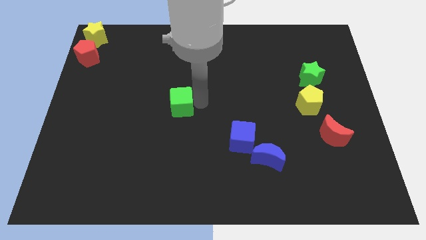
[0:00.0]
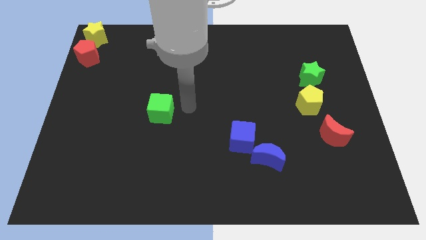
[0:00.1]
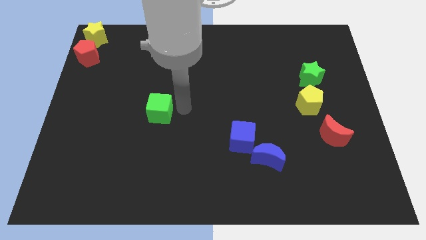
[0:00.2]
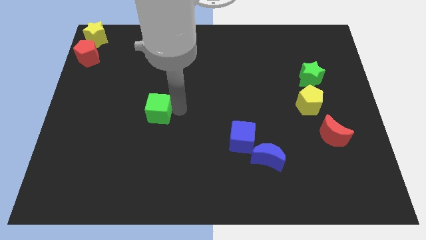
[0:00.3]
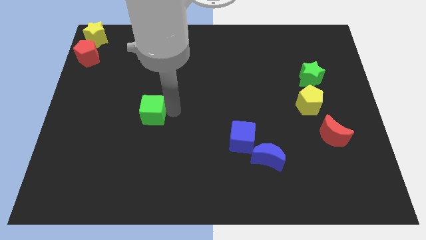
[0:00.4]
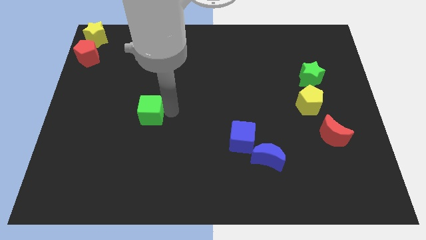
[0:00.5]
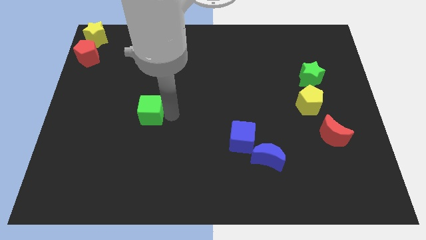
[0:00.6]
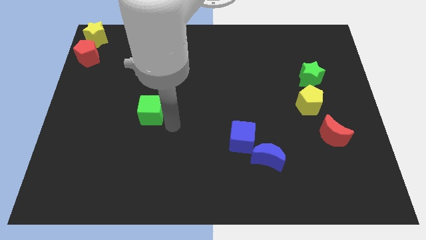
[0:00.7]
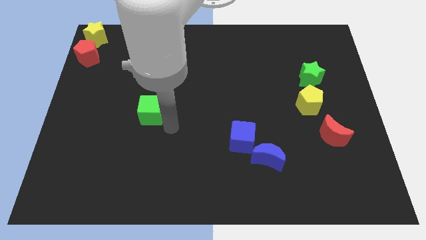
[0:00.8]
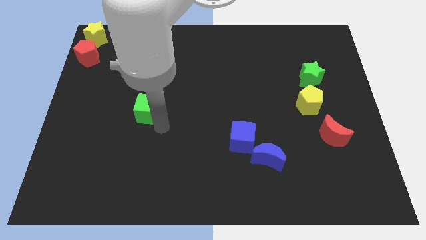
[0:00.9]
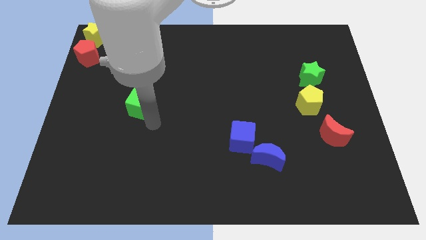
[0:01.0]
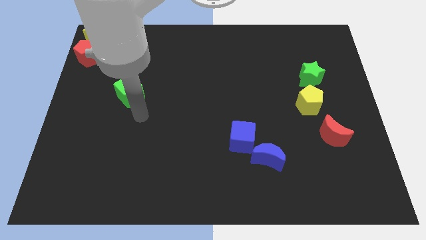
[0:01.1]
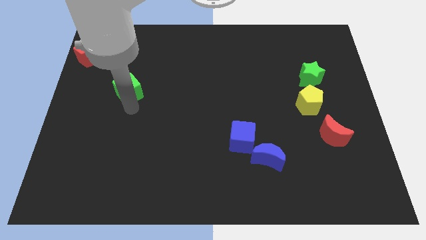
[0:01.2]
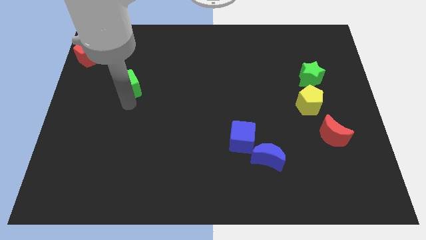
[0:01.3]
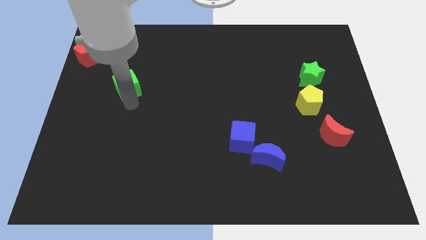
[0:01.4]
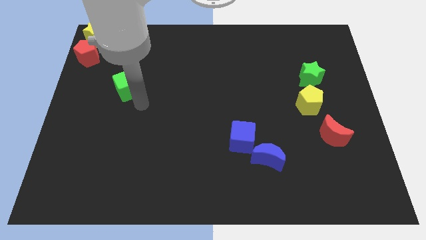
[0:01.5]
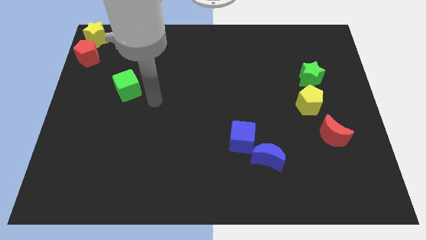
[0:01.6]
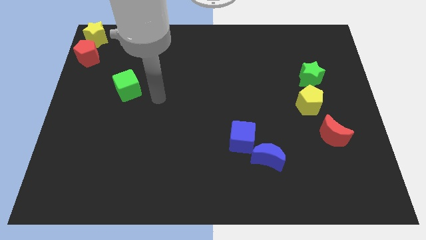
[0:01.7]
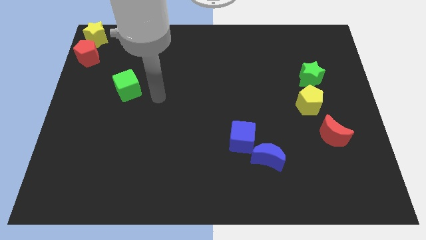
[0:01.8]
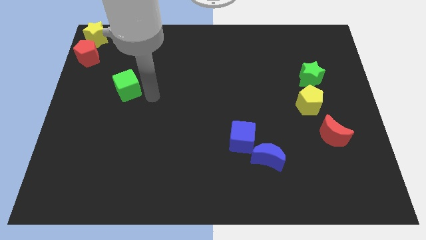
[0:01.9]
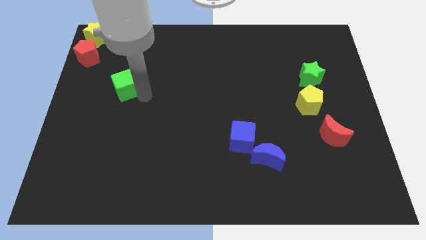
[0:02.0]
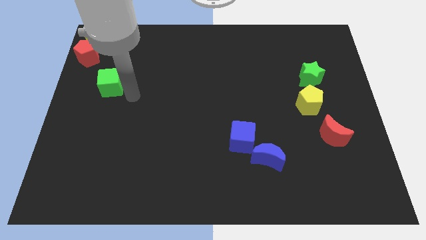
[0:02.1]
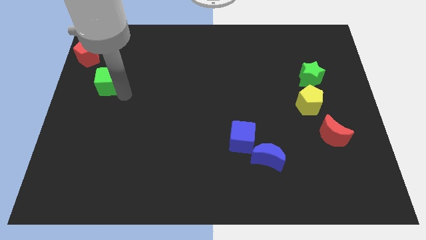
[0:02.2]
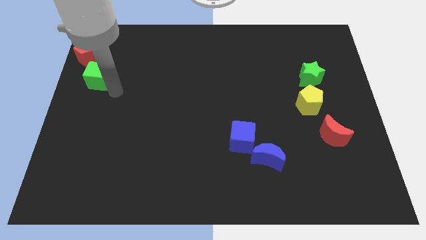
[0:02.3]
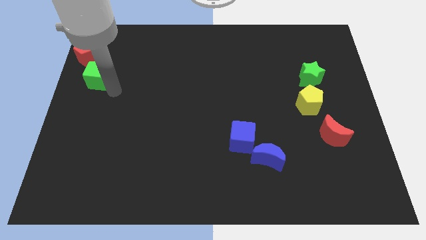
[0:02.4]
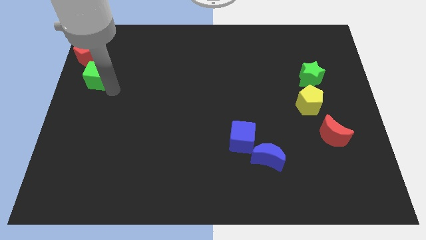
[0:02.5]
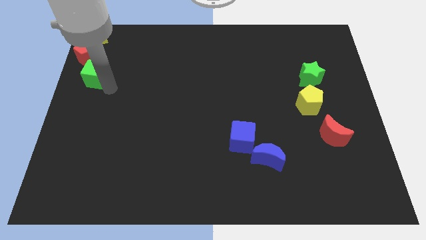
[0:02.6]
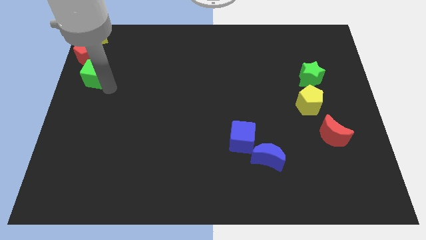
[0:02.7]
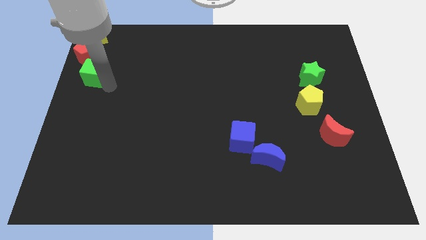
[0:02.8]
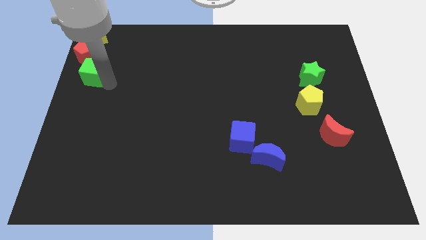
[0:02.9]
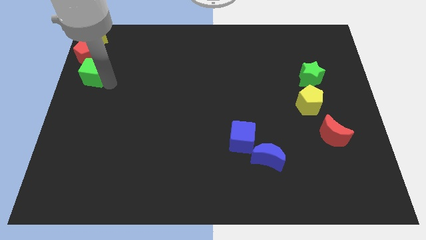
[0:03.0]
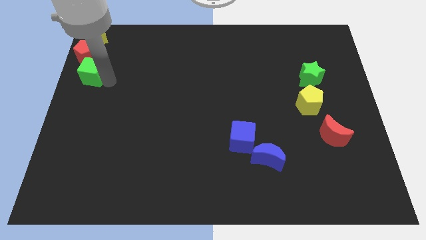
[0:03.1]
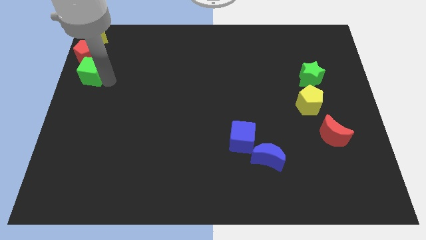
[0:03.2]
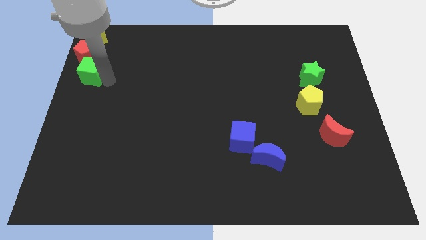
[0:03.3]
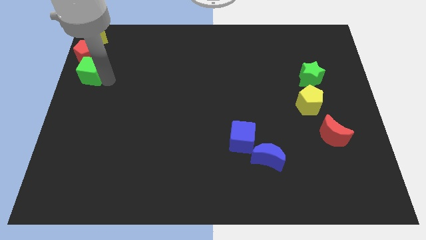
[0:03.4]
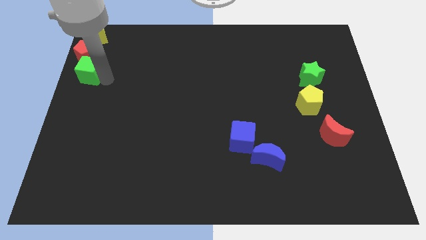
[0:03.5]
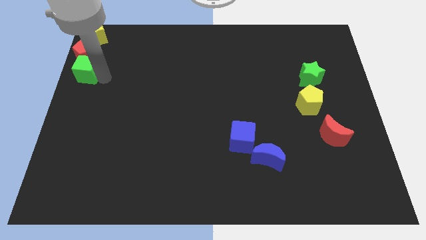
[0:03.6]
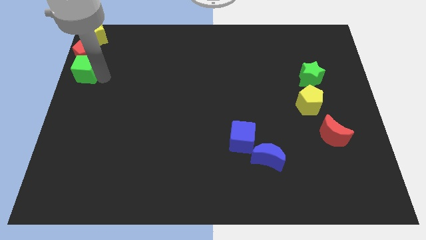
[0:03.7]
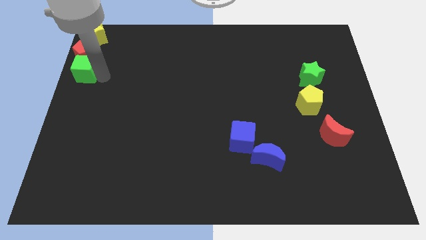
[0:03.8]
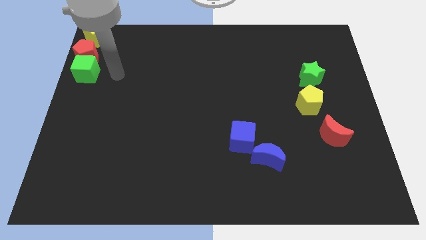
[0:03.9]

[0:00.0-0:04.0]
place the green cube at the bottom of red pentagon

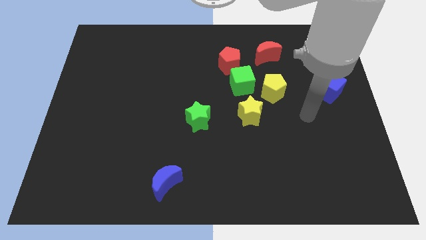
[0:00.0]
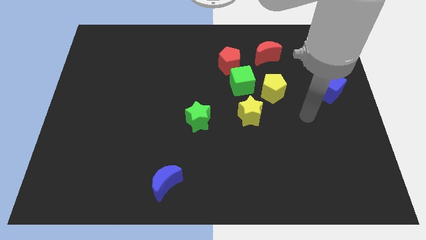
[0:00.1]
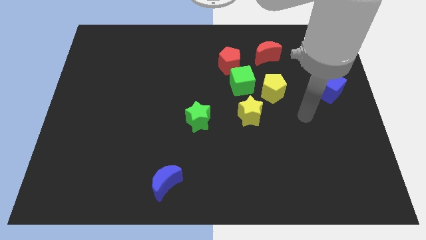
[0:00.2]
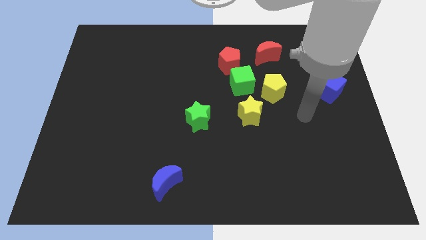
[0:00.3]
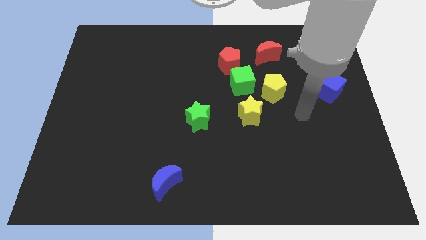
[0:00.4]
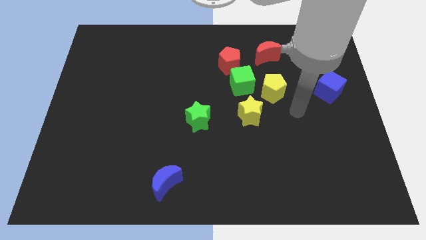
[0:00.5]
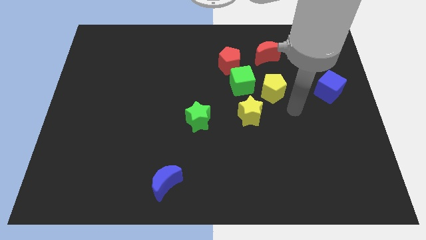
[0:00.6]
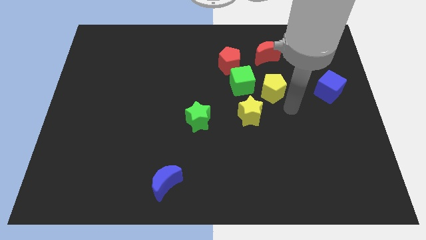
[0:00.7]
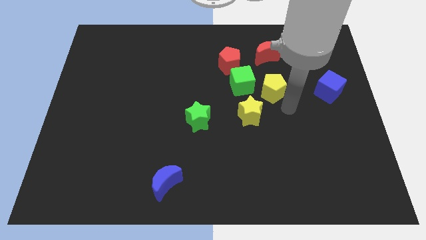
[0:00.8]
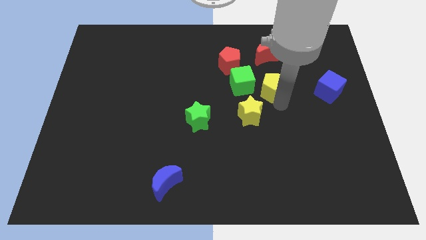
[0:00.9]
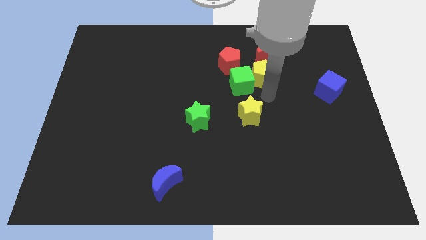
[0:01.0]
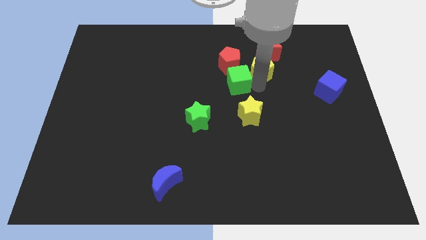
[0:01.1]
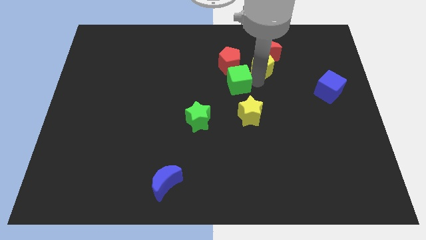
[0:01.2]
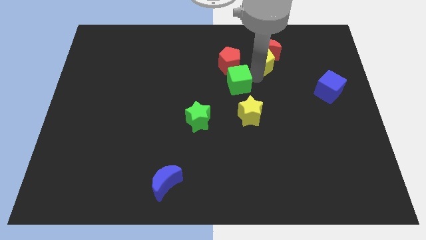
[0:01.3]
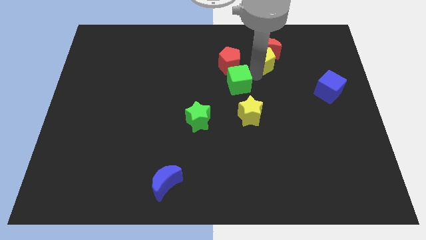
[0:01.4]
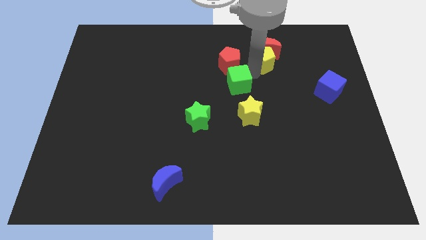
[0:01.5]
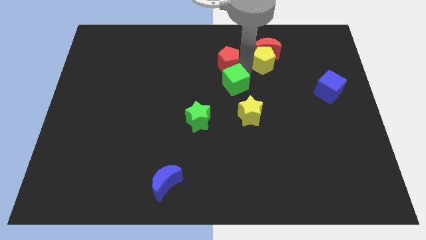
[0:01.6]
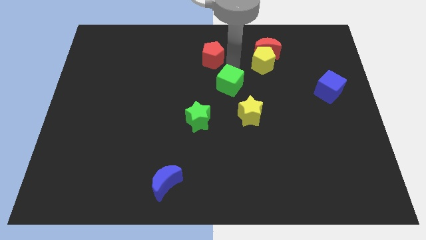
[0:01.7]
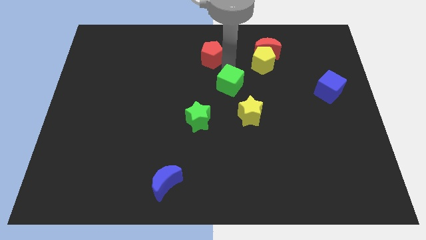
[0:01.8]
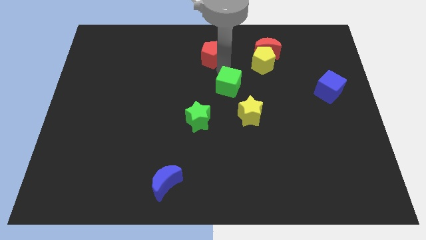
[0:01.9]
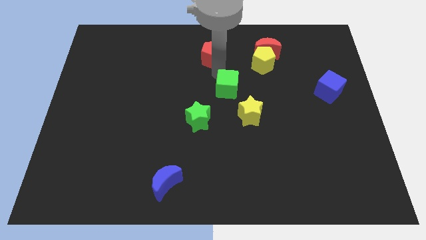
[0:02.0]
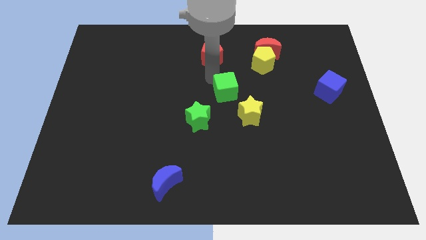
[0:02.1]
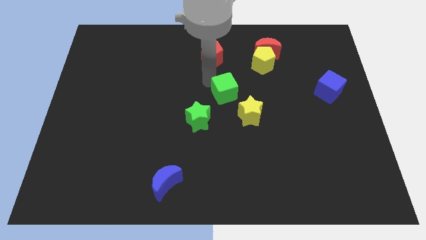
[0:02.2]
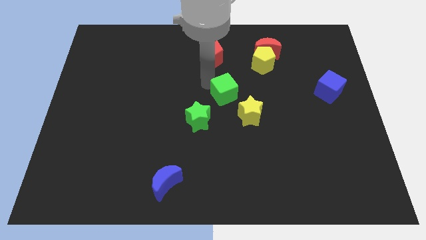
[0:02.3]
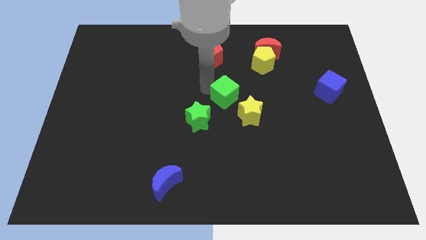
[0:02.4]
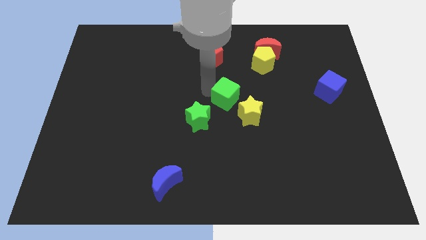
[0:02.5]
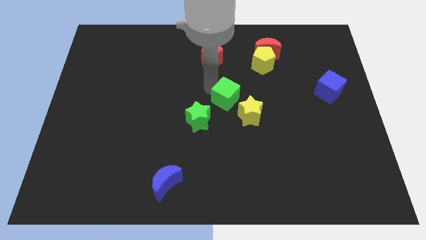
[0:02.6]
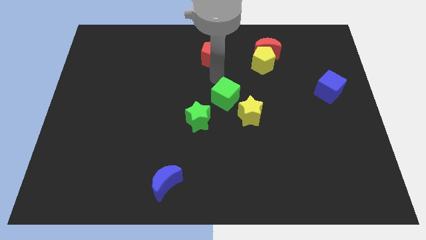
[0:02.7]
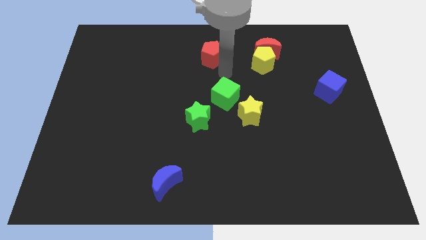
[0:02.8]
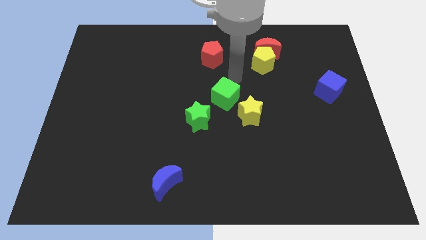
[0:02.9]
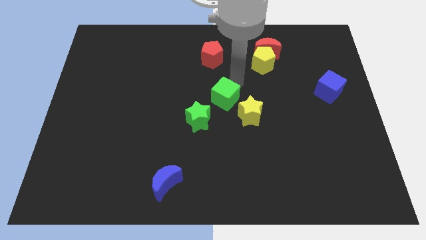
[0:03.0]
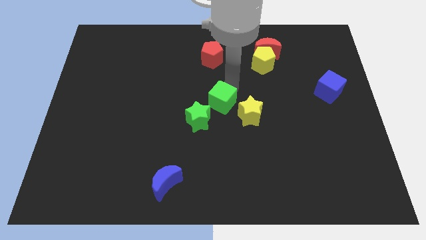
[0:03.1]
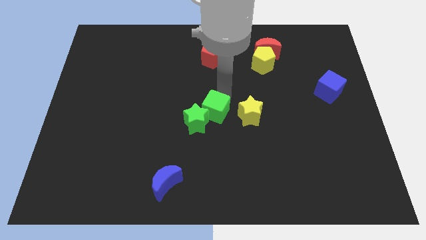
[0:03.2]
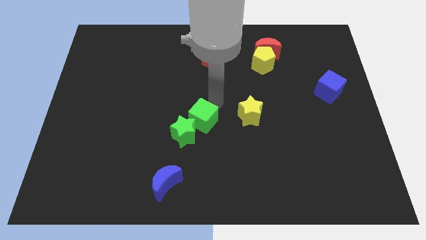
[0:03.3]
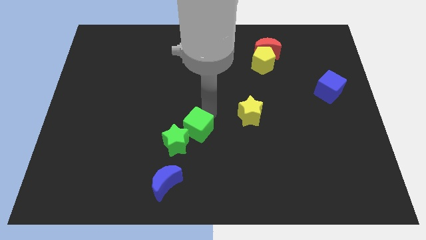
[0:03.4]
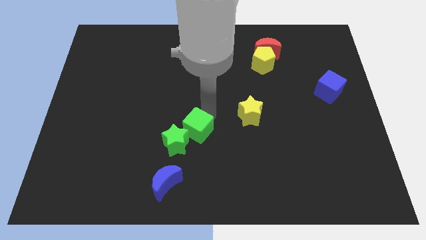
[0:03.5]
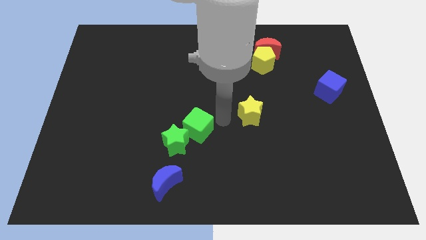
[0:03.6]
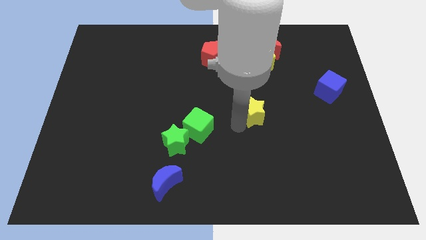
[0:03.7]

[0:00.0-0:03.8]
push the green cube into the green star

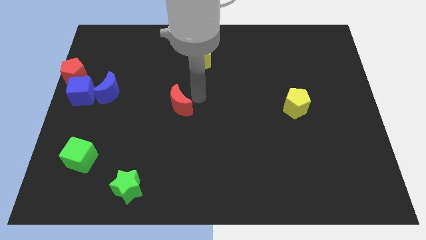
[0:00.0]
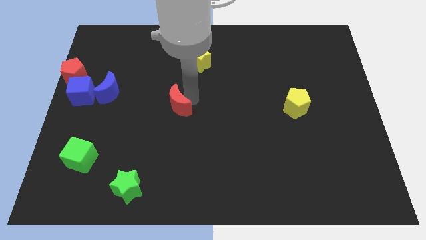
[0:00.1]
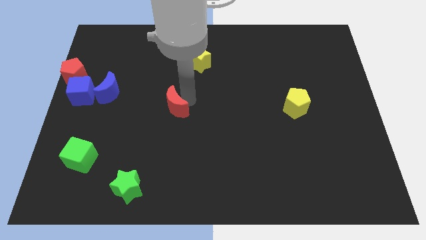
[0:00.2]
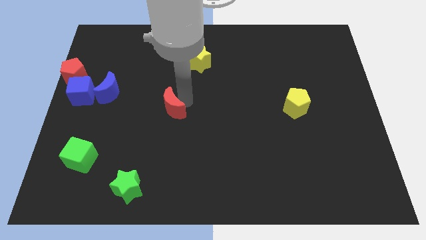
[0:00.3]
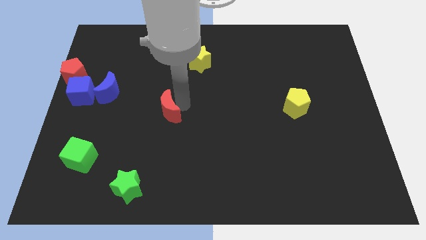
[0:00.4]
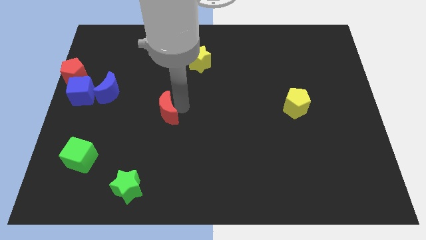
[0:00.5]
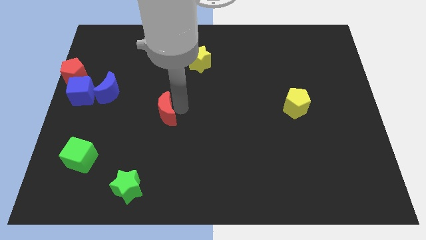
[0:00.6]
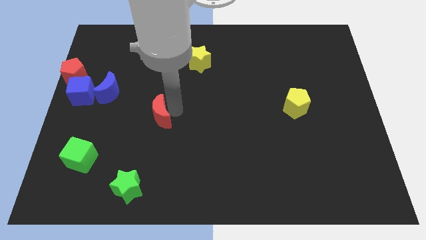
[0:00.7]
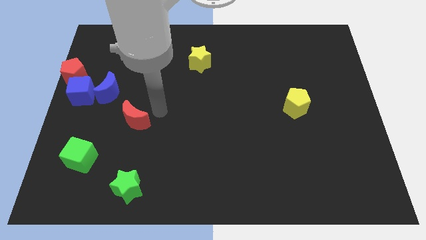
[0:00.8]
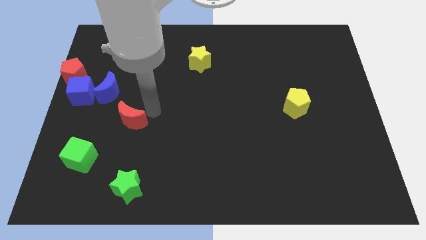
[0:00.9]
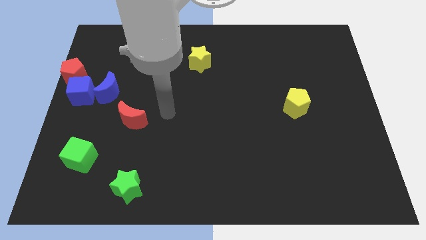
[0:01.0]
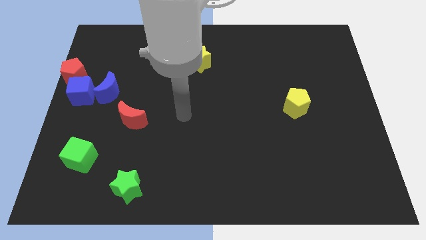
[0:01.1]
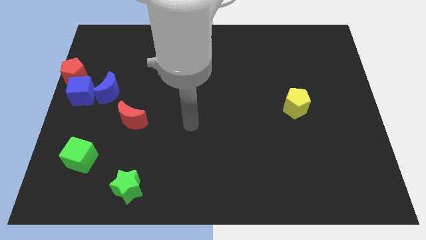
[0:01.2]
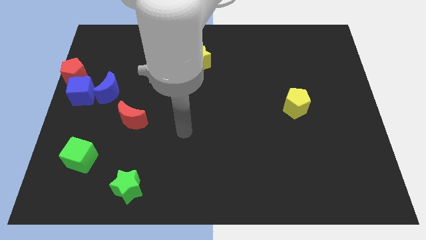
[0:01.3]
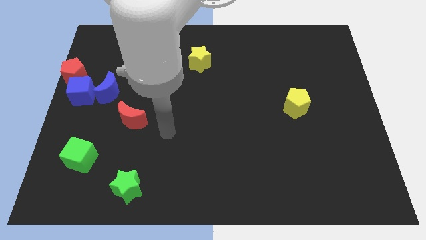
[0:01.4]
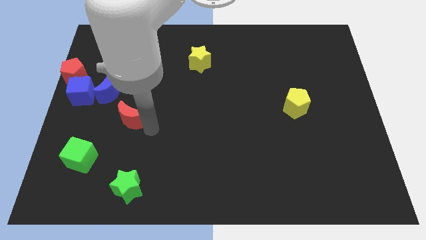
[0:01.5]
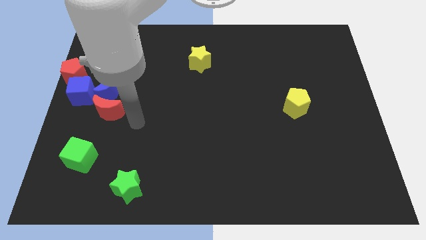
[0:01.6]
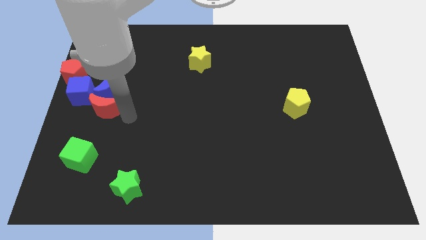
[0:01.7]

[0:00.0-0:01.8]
put the red crescent below the blue crescent
